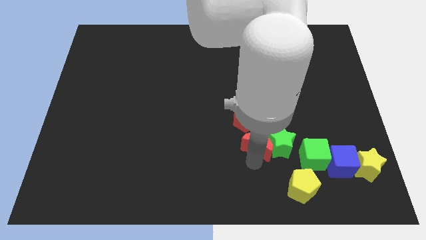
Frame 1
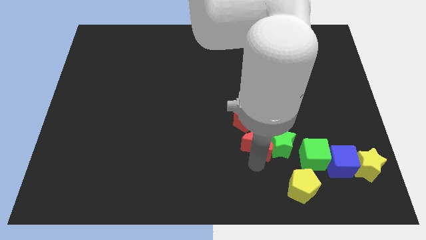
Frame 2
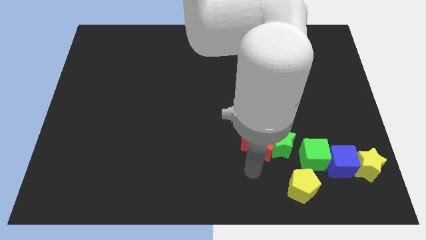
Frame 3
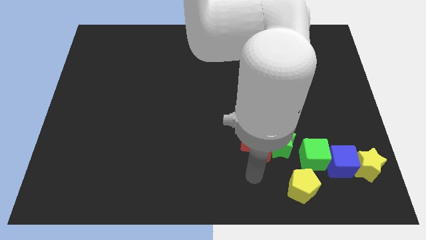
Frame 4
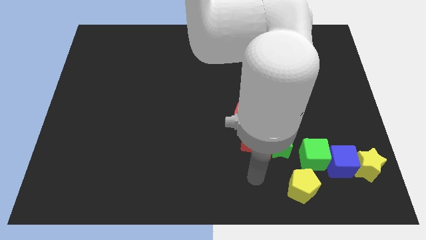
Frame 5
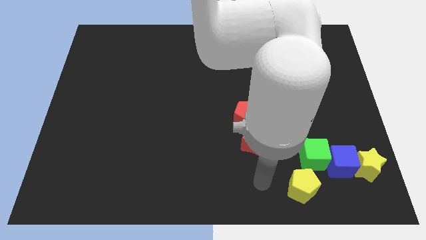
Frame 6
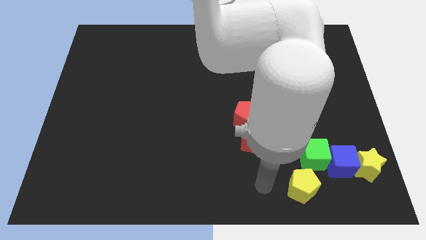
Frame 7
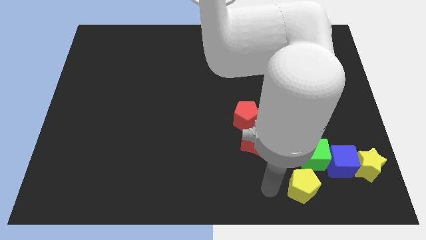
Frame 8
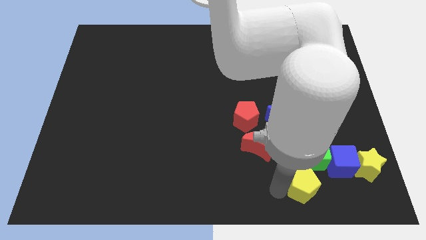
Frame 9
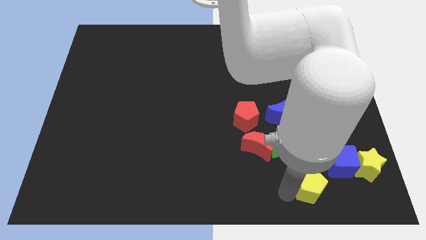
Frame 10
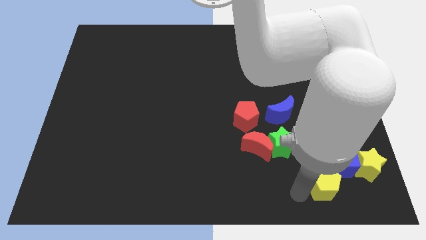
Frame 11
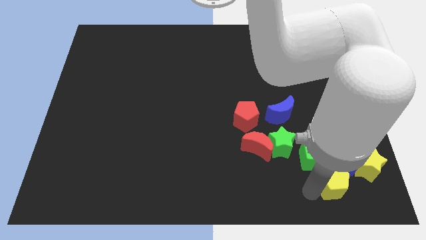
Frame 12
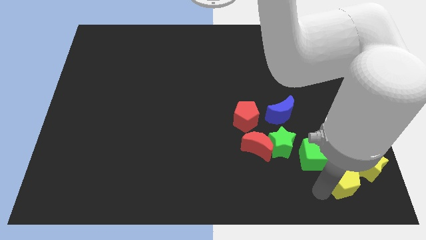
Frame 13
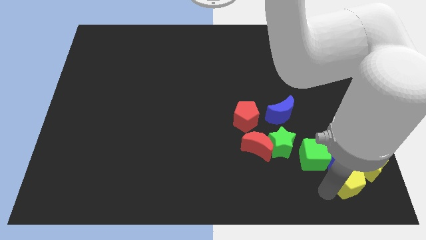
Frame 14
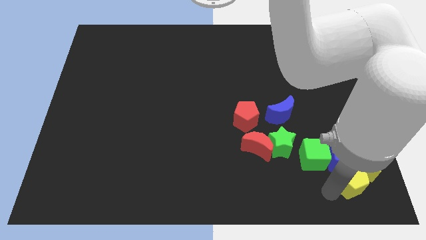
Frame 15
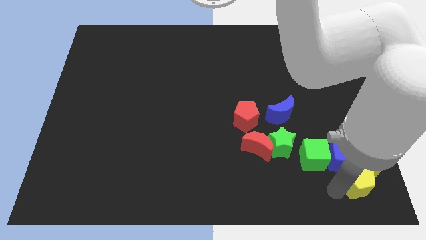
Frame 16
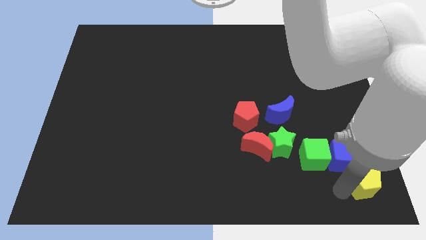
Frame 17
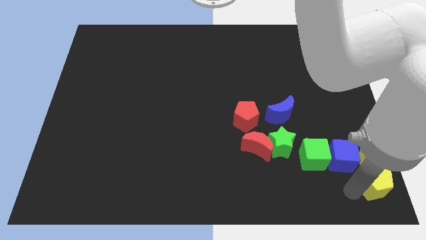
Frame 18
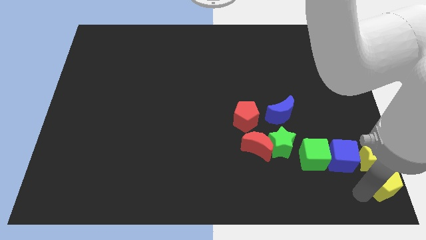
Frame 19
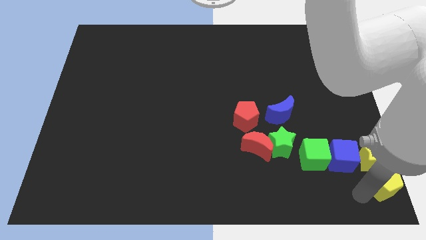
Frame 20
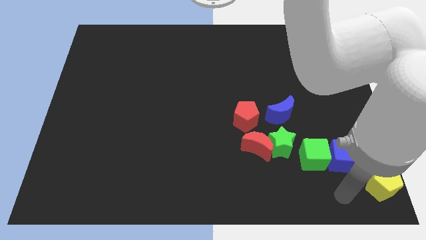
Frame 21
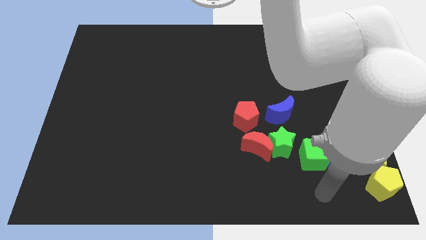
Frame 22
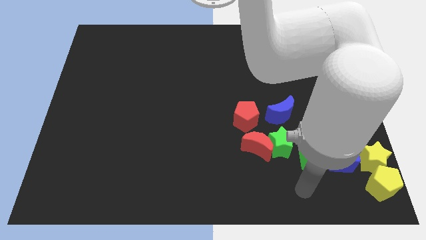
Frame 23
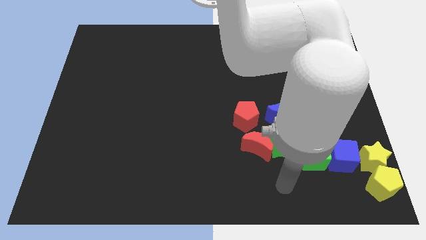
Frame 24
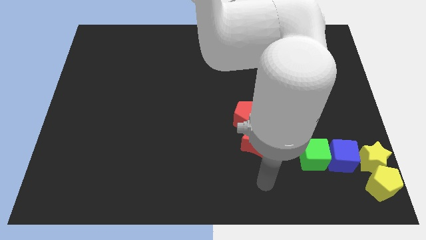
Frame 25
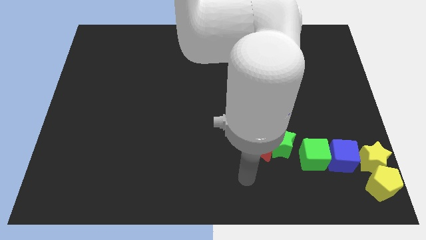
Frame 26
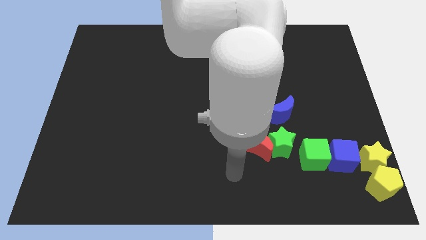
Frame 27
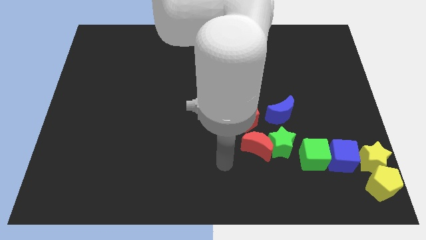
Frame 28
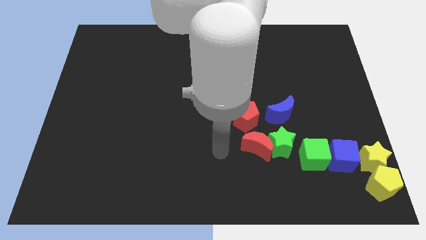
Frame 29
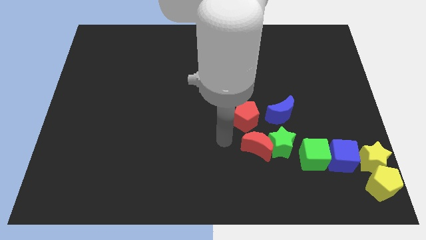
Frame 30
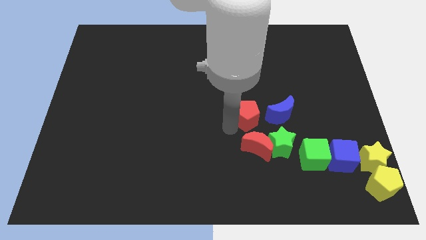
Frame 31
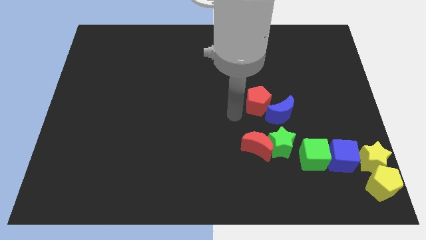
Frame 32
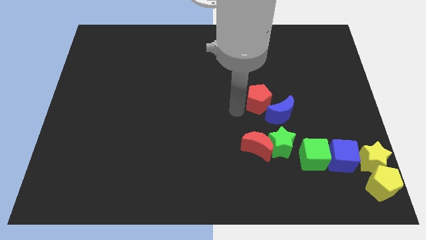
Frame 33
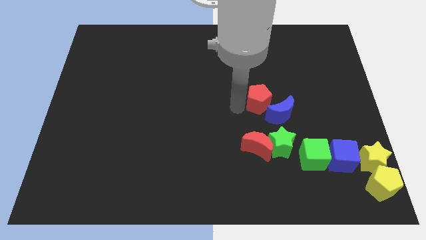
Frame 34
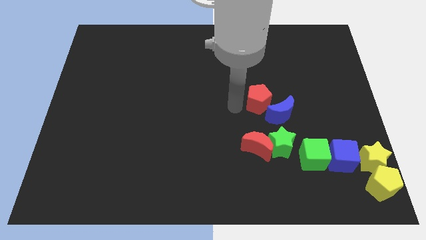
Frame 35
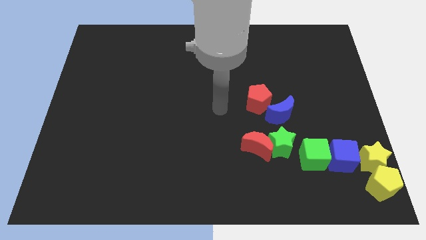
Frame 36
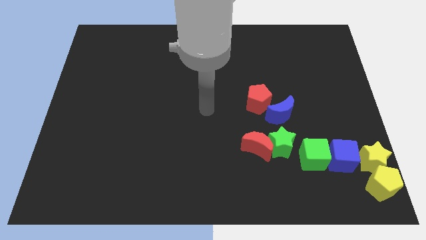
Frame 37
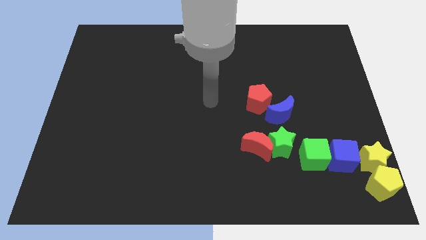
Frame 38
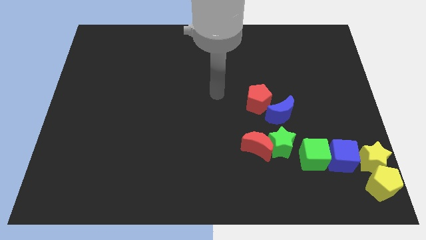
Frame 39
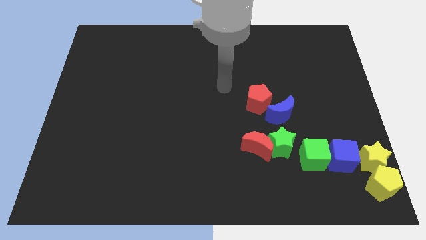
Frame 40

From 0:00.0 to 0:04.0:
move the yellow pentagon to the bottom of the green star

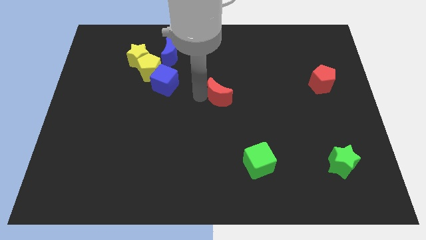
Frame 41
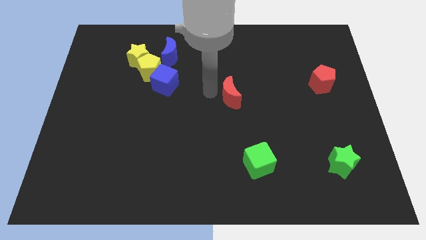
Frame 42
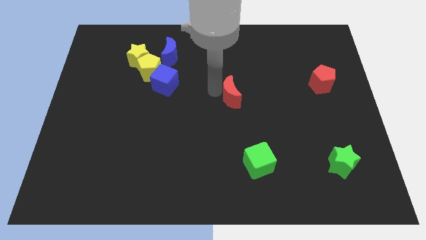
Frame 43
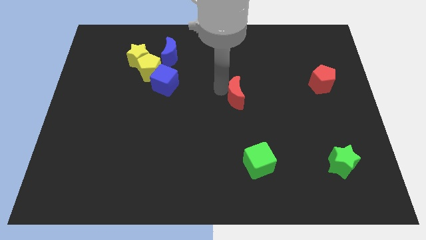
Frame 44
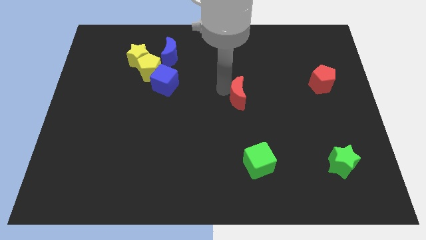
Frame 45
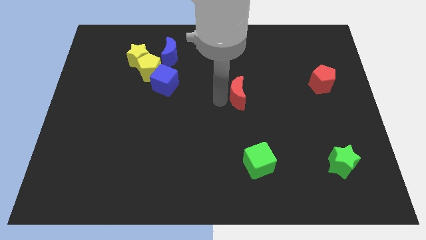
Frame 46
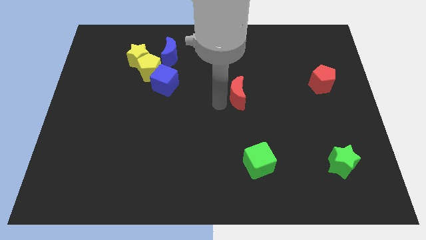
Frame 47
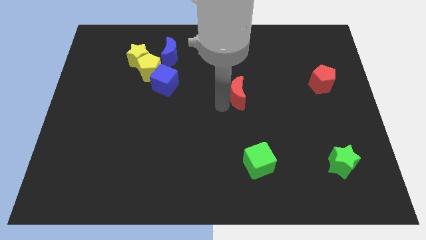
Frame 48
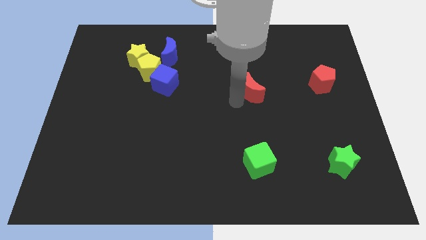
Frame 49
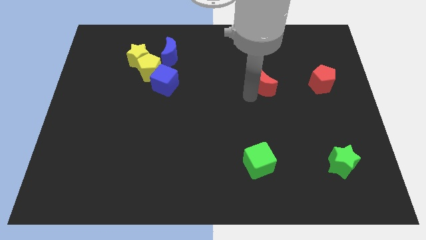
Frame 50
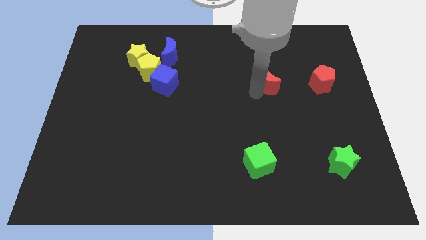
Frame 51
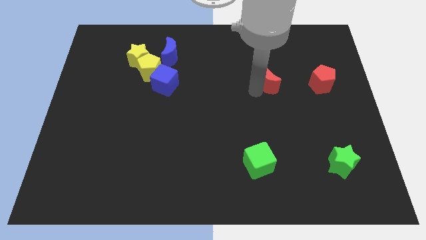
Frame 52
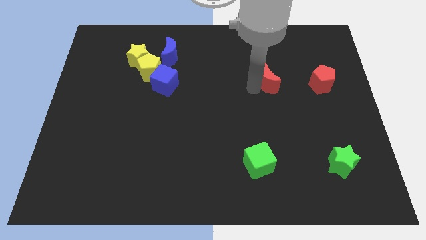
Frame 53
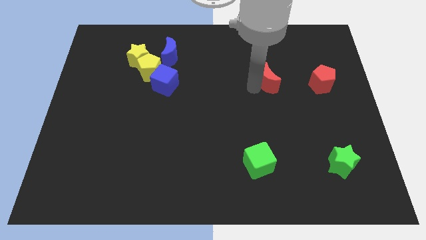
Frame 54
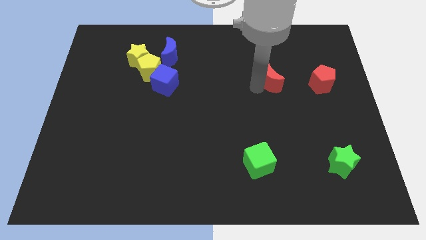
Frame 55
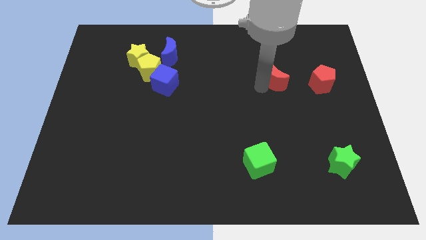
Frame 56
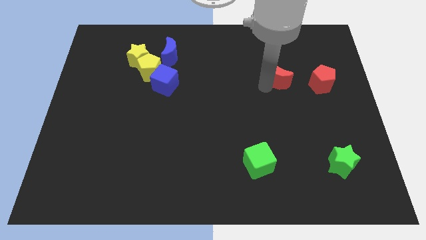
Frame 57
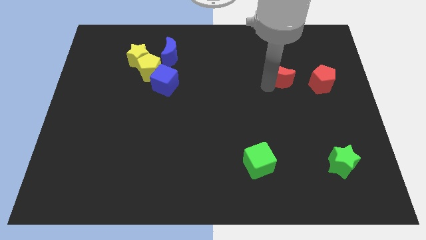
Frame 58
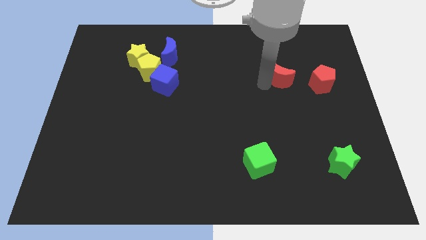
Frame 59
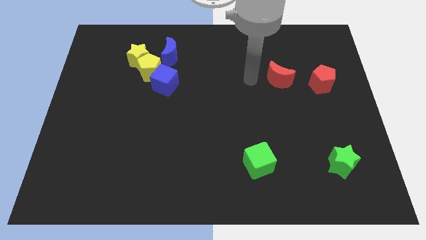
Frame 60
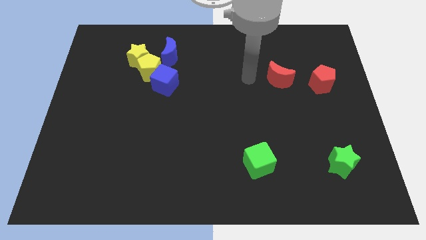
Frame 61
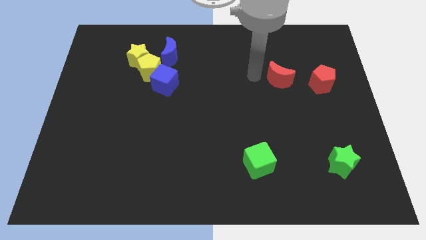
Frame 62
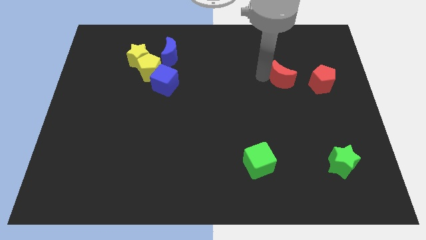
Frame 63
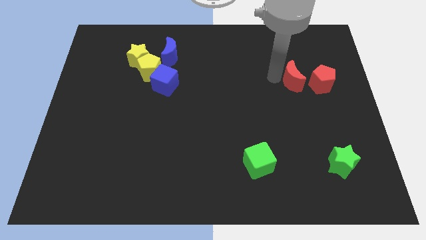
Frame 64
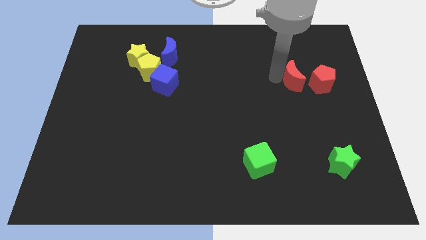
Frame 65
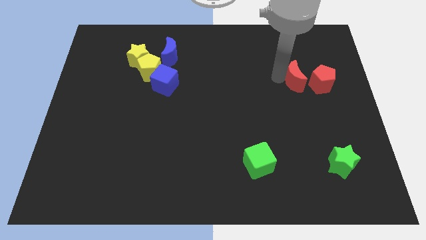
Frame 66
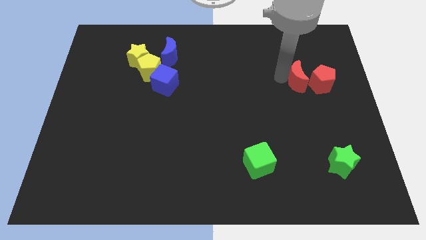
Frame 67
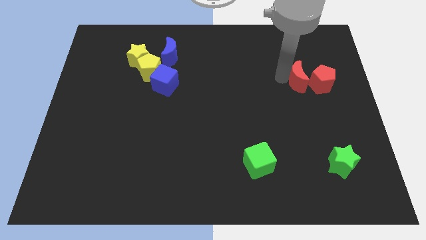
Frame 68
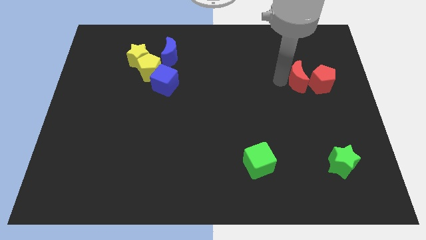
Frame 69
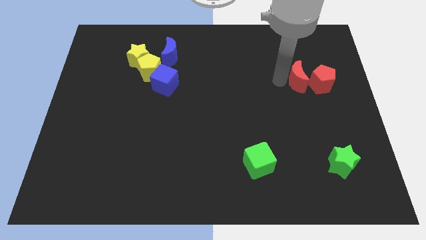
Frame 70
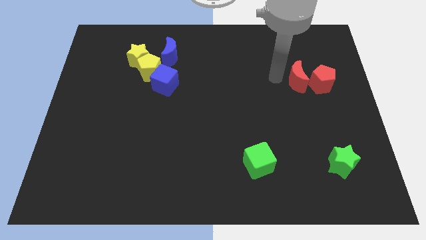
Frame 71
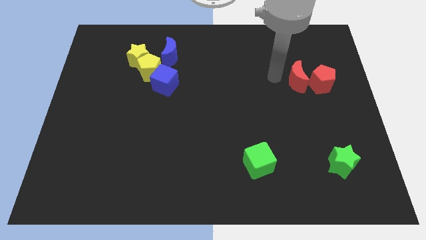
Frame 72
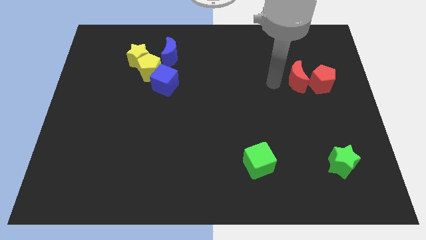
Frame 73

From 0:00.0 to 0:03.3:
slide the red crescent to the left side of the red pentagon

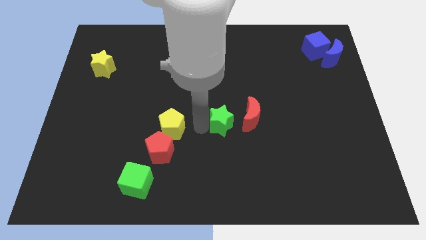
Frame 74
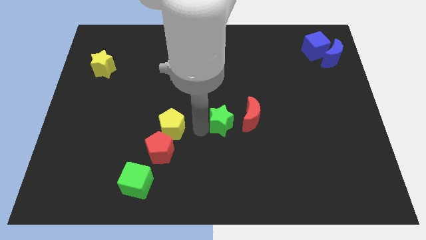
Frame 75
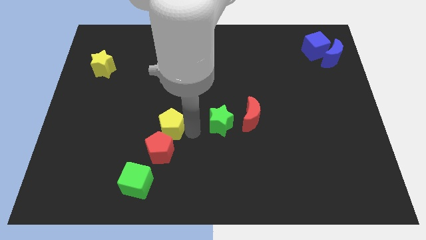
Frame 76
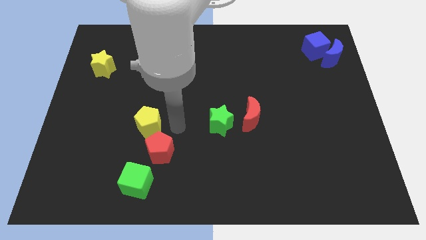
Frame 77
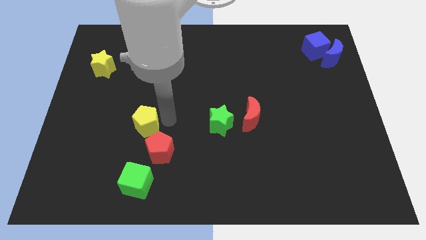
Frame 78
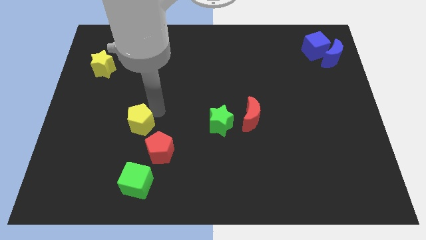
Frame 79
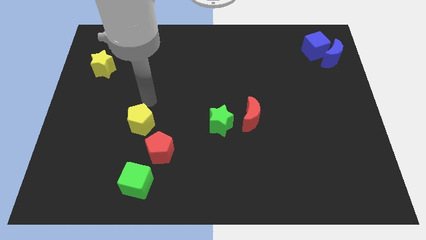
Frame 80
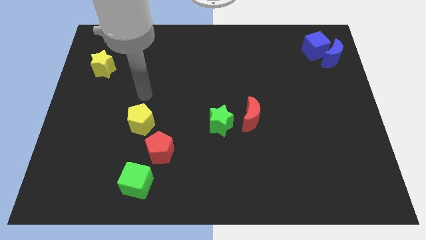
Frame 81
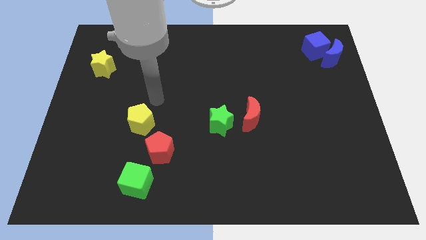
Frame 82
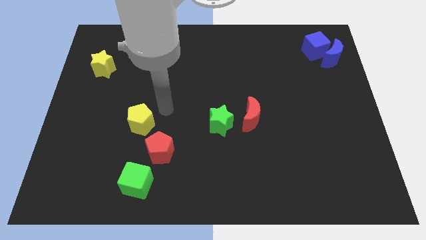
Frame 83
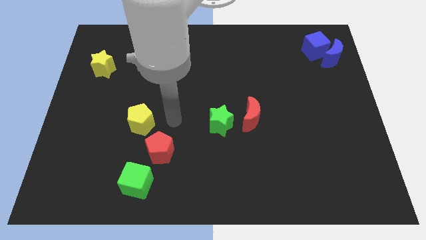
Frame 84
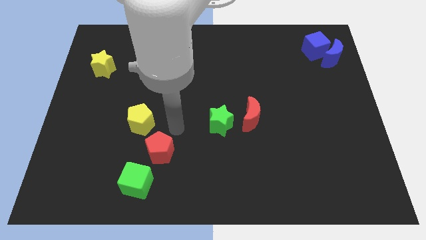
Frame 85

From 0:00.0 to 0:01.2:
move the yellow pentagon slightly to the left

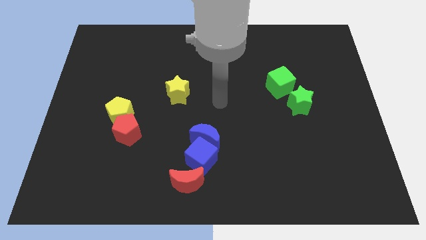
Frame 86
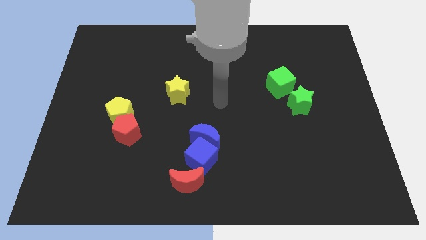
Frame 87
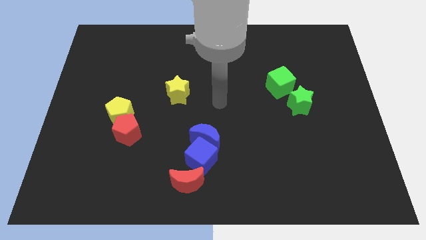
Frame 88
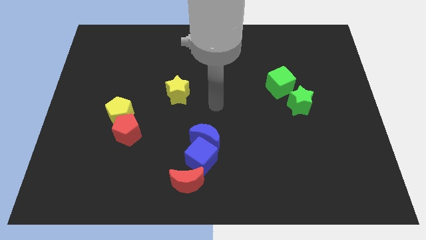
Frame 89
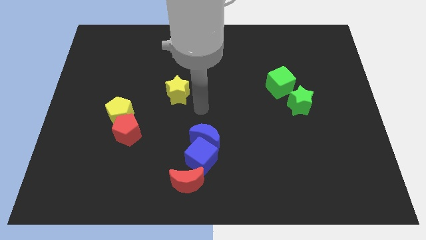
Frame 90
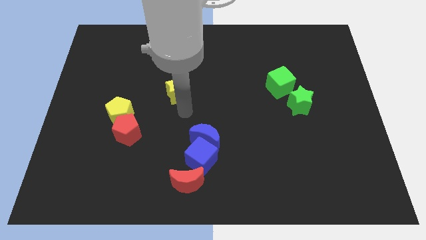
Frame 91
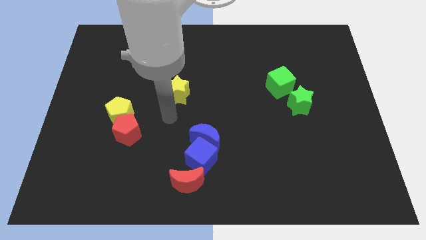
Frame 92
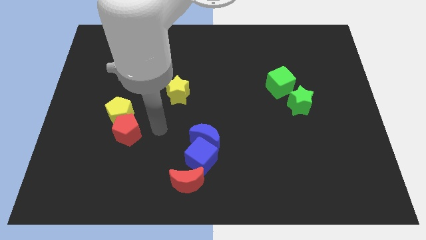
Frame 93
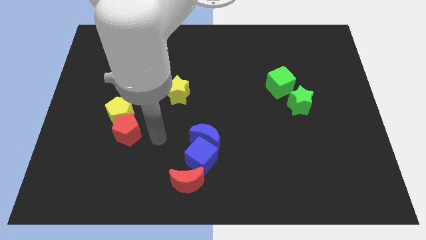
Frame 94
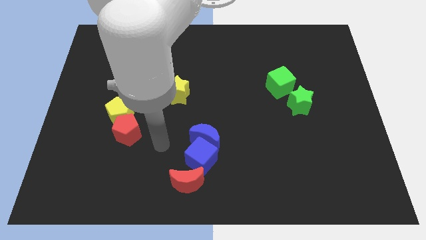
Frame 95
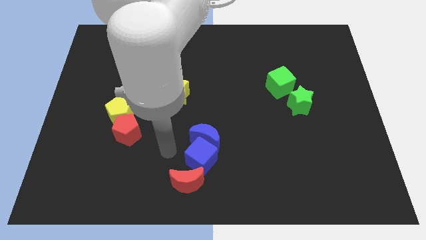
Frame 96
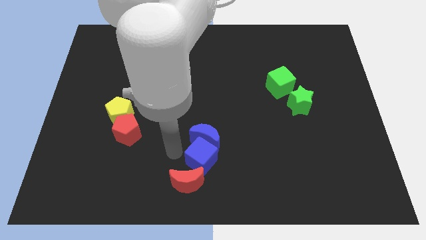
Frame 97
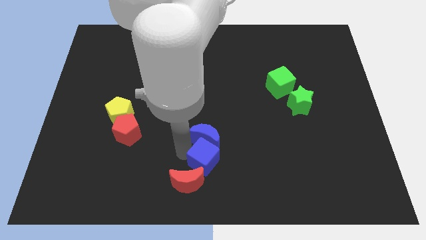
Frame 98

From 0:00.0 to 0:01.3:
tap the blue cube
